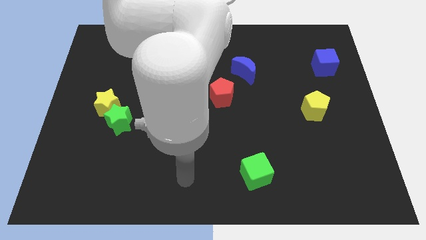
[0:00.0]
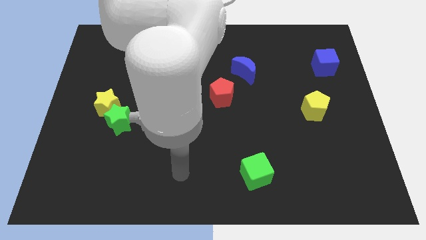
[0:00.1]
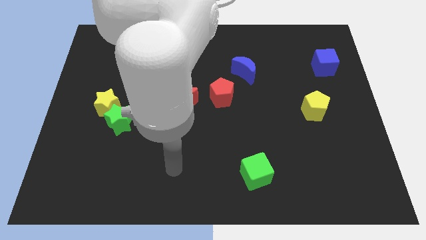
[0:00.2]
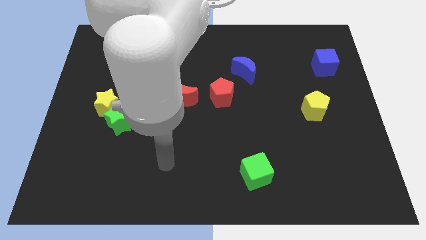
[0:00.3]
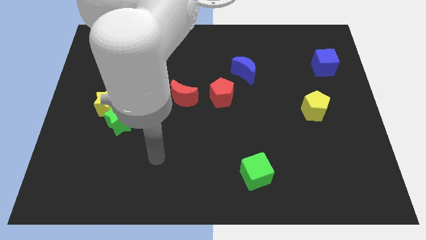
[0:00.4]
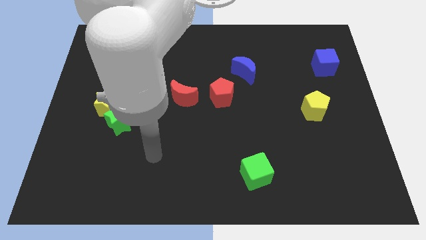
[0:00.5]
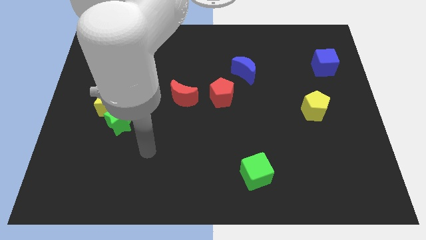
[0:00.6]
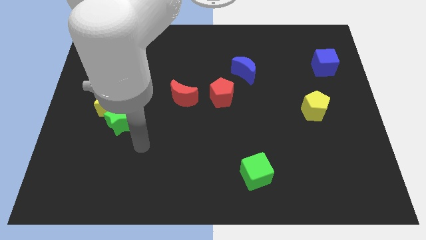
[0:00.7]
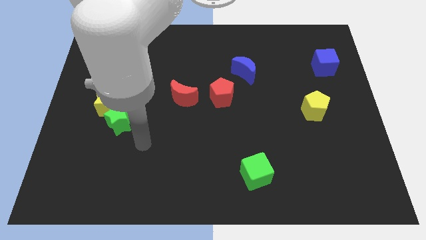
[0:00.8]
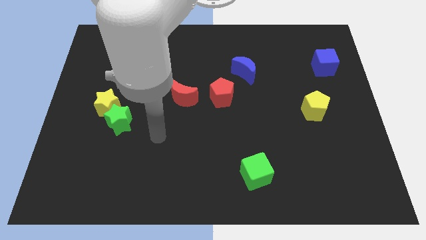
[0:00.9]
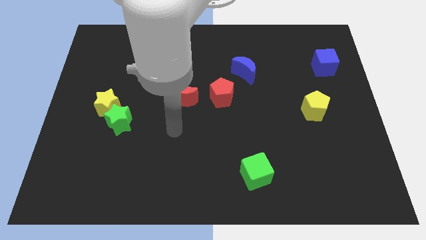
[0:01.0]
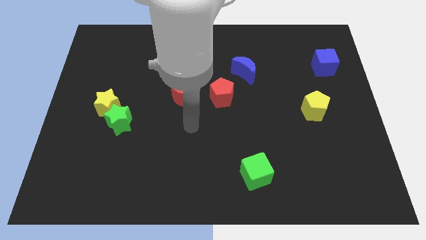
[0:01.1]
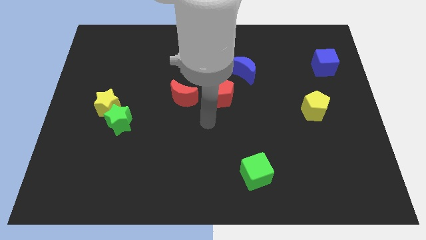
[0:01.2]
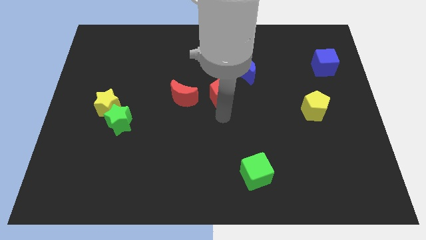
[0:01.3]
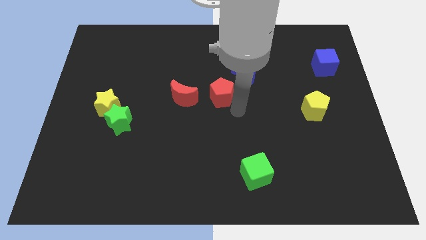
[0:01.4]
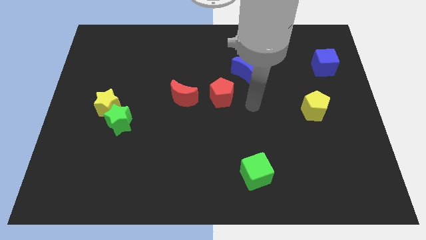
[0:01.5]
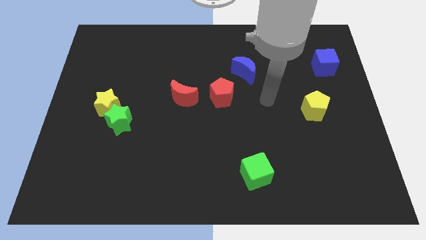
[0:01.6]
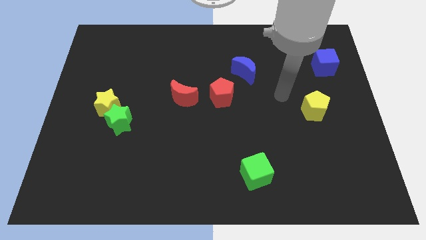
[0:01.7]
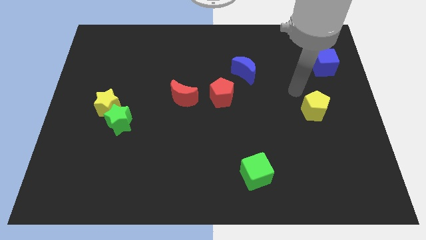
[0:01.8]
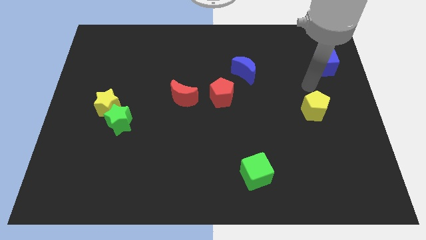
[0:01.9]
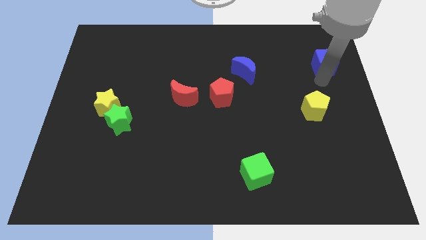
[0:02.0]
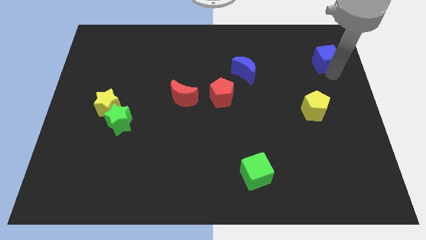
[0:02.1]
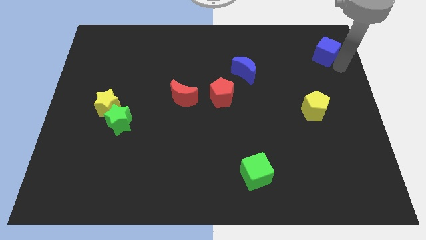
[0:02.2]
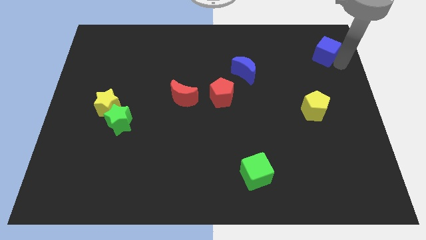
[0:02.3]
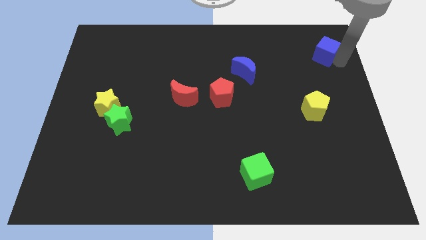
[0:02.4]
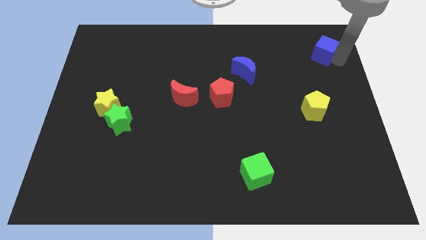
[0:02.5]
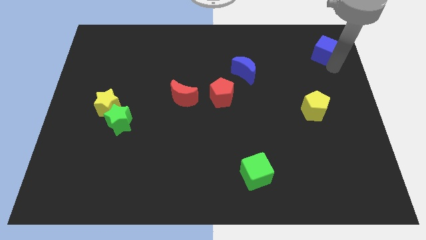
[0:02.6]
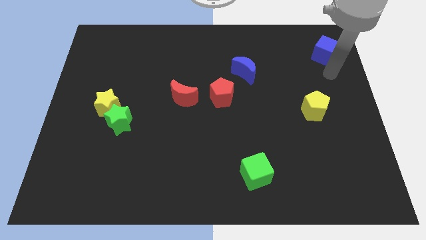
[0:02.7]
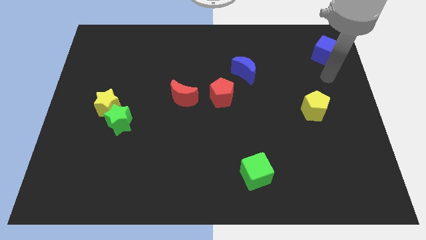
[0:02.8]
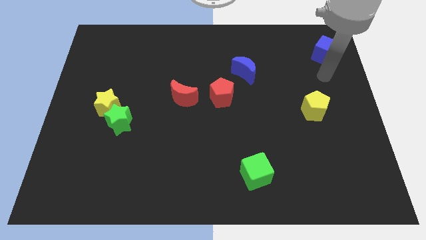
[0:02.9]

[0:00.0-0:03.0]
push the blue cube diagonally to yellow pentagon

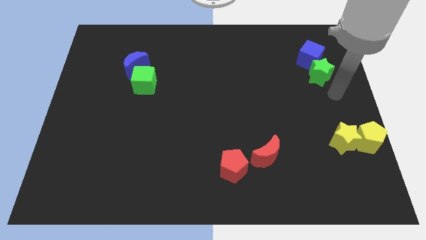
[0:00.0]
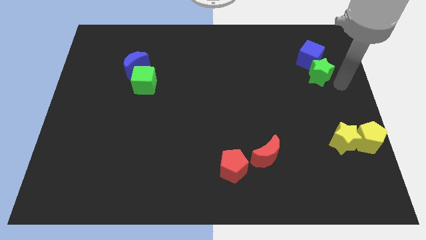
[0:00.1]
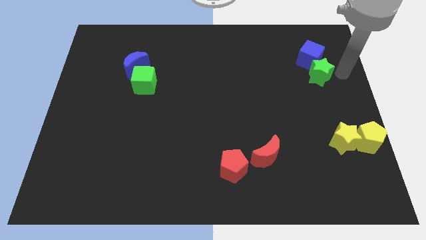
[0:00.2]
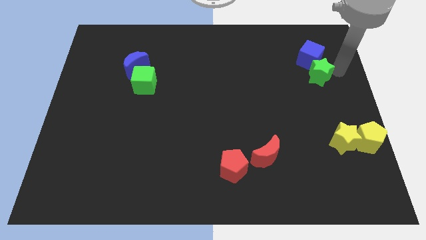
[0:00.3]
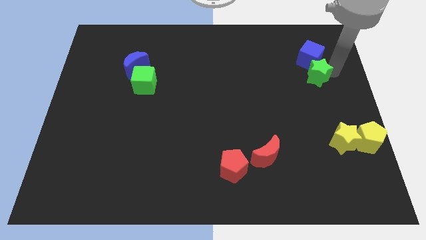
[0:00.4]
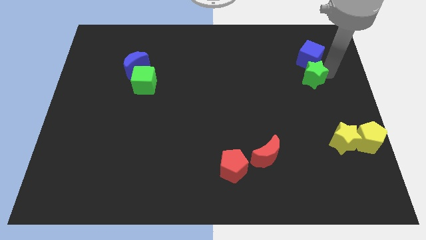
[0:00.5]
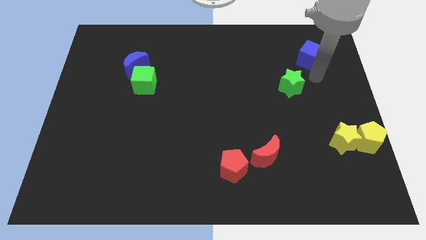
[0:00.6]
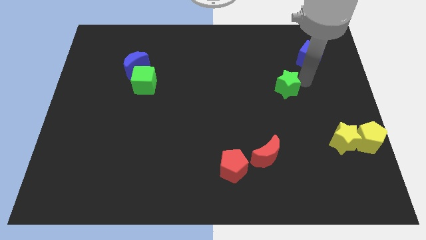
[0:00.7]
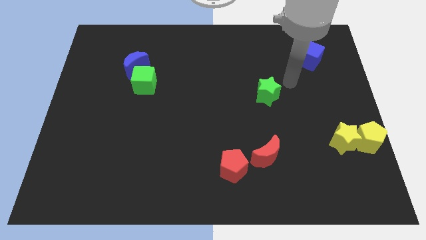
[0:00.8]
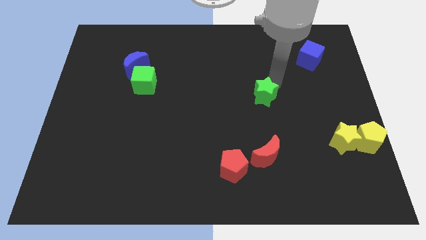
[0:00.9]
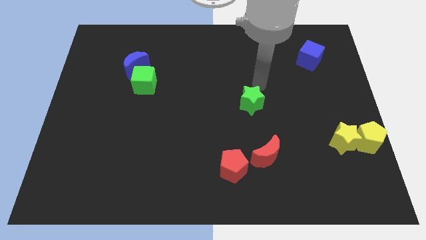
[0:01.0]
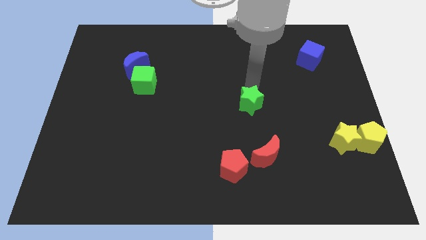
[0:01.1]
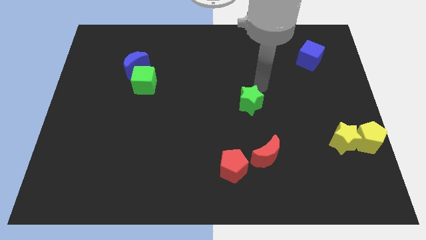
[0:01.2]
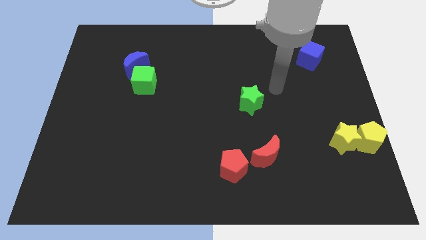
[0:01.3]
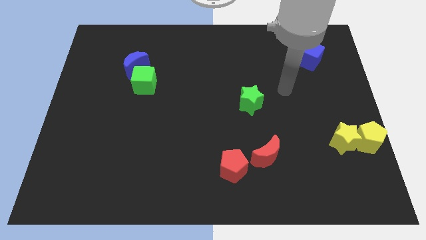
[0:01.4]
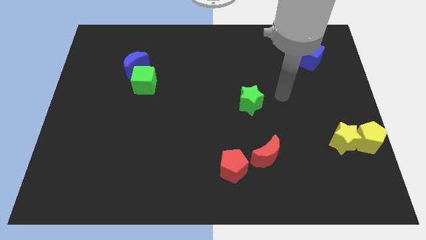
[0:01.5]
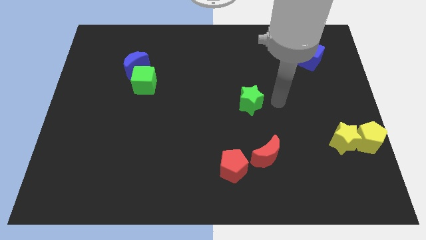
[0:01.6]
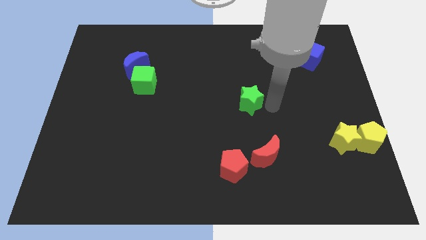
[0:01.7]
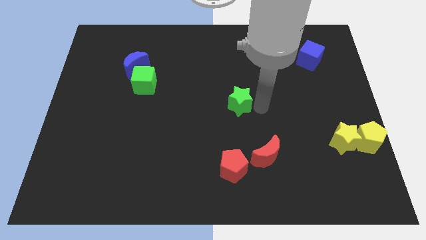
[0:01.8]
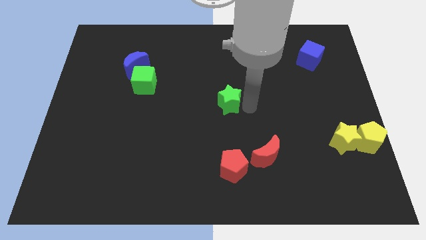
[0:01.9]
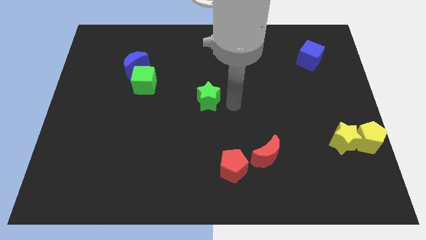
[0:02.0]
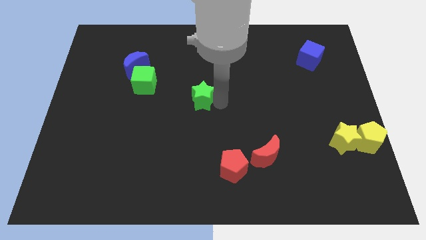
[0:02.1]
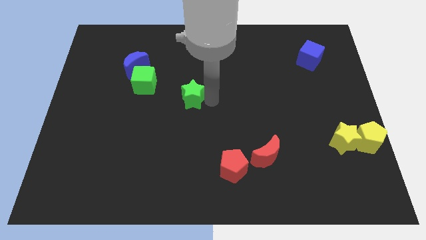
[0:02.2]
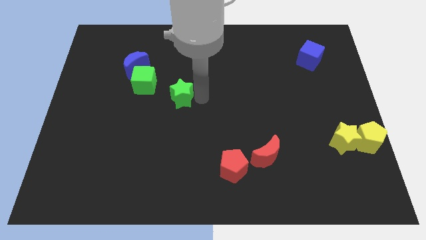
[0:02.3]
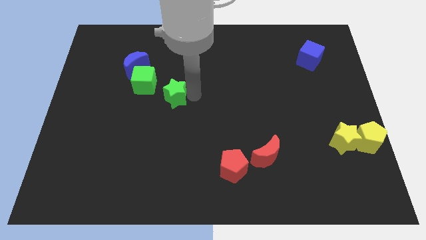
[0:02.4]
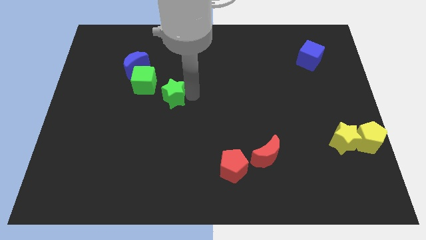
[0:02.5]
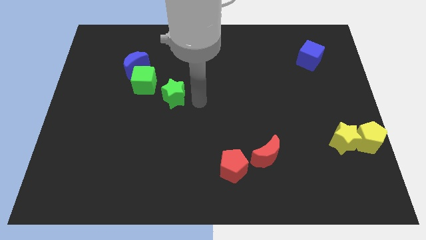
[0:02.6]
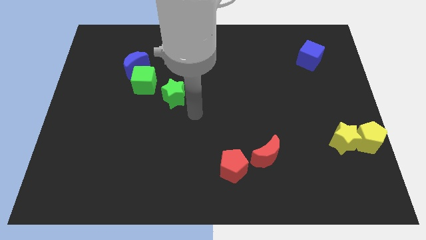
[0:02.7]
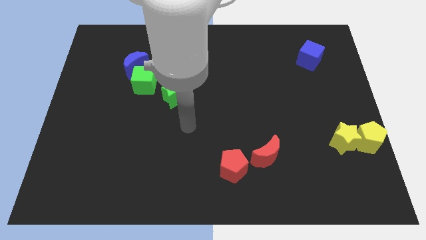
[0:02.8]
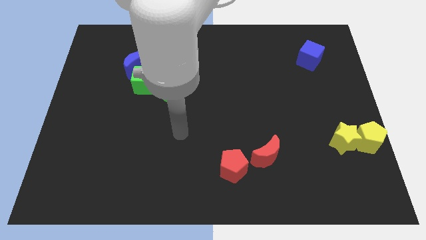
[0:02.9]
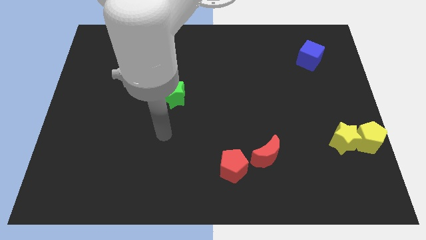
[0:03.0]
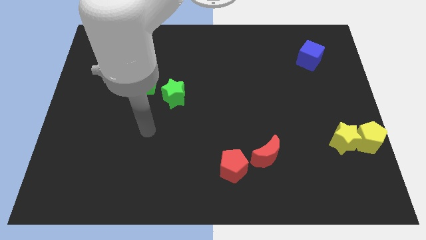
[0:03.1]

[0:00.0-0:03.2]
move green star towards the green cube

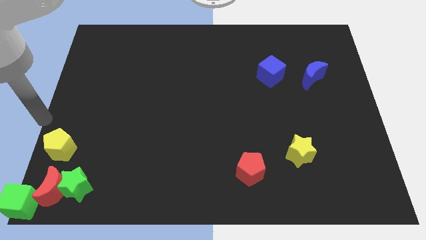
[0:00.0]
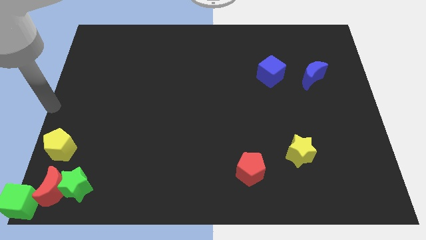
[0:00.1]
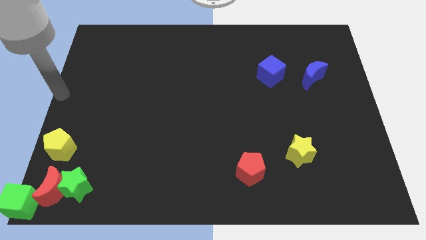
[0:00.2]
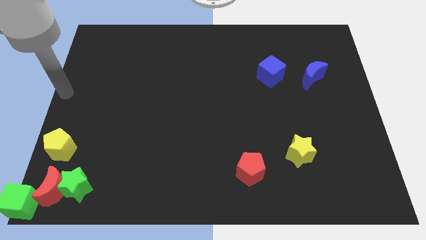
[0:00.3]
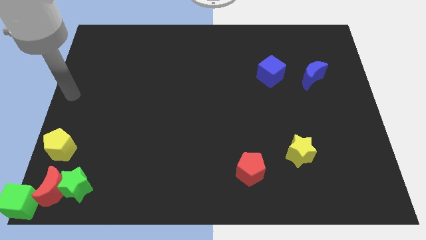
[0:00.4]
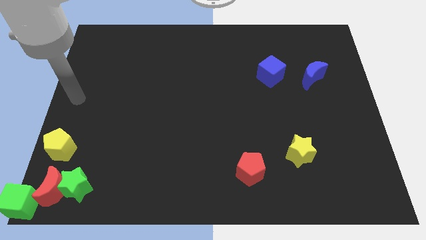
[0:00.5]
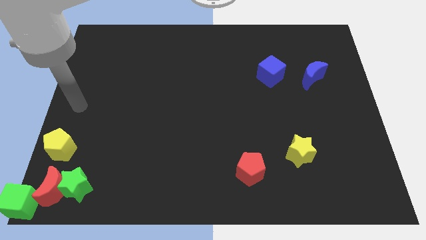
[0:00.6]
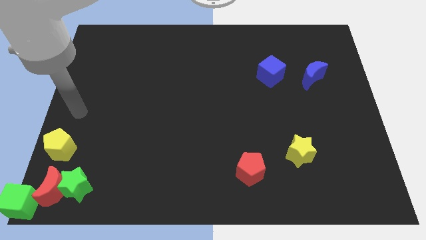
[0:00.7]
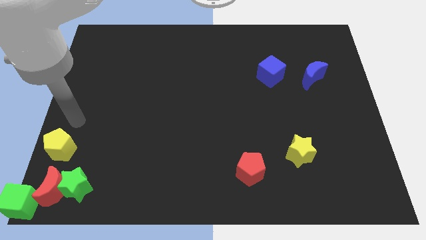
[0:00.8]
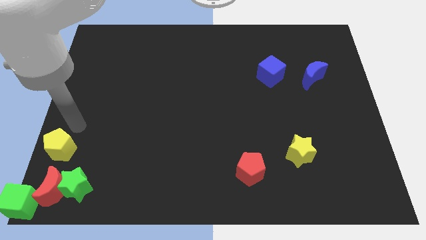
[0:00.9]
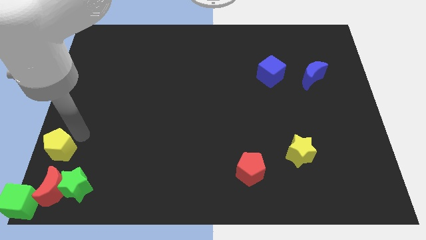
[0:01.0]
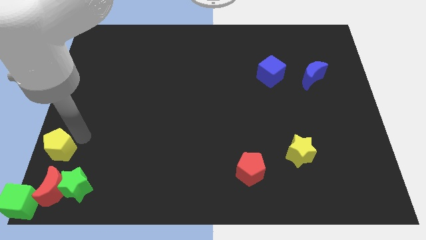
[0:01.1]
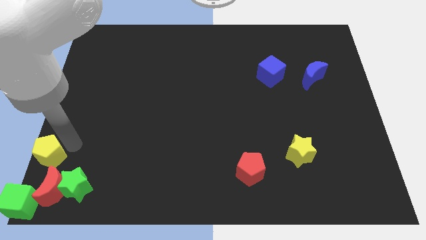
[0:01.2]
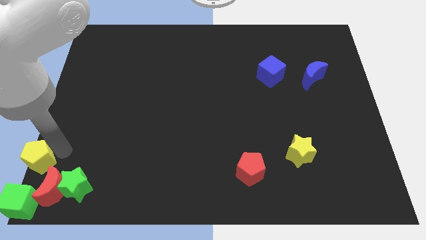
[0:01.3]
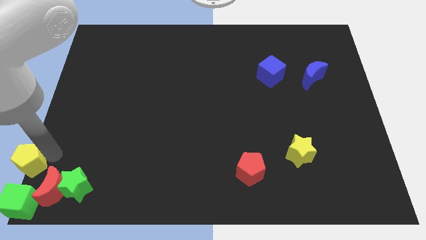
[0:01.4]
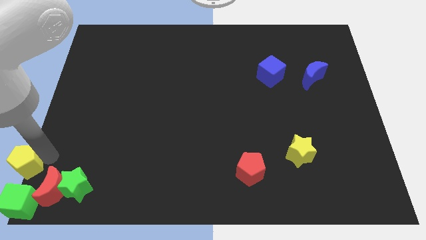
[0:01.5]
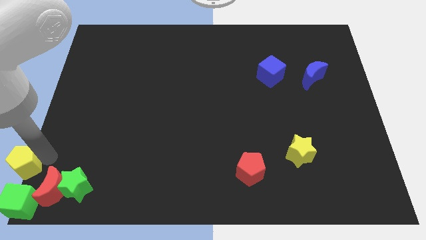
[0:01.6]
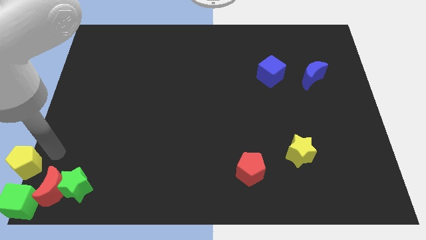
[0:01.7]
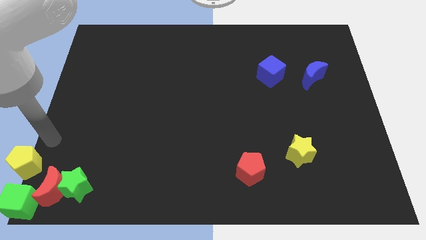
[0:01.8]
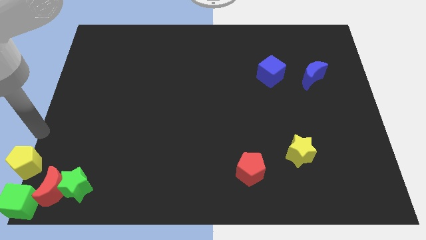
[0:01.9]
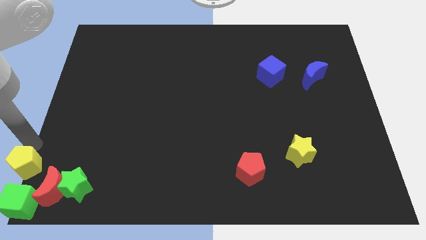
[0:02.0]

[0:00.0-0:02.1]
push the yellow pentagon to the bottom left of the board

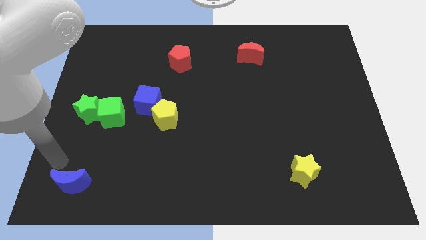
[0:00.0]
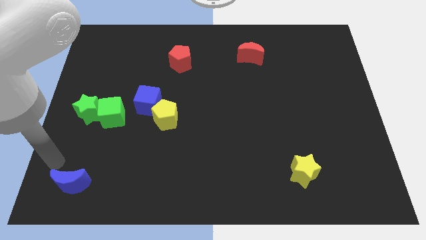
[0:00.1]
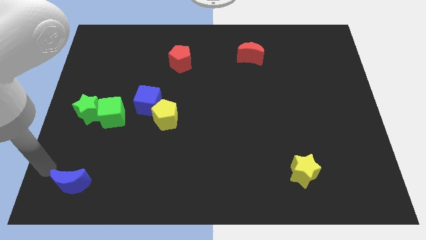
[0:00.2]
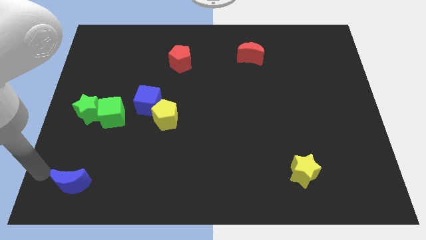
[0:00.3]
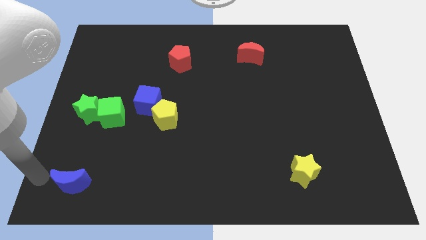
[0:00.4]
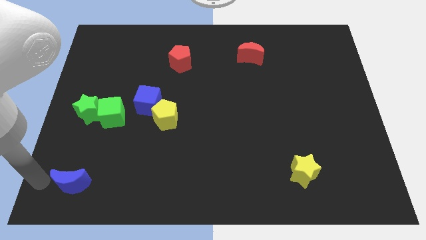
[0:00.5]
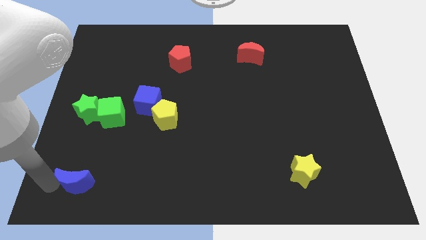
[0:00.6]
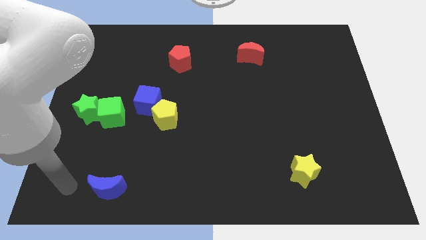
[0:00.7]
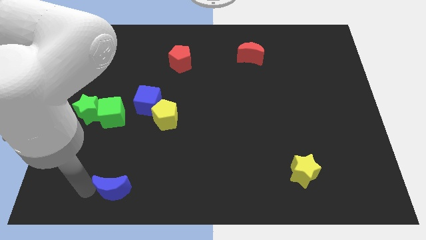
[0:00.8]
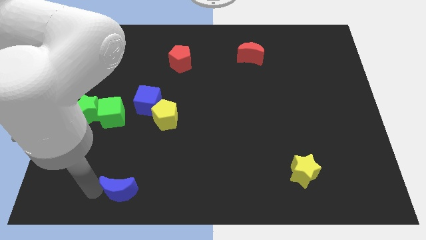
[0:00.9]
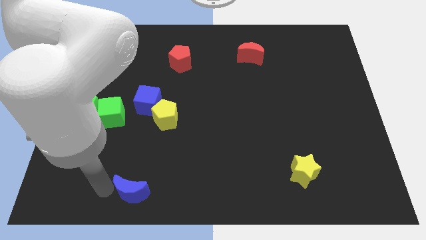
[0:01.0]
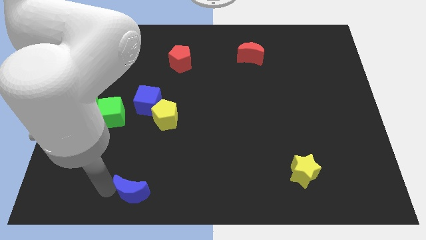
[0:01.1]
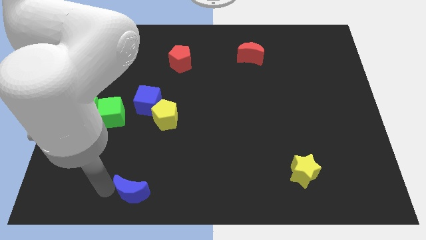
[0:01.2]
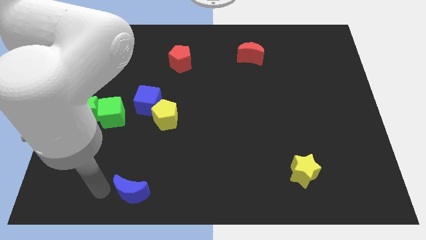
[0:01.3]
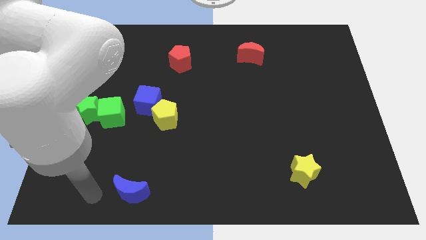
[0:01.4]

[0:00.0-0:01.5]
push the blue crescent to the right
